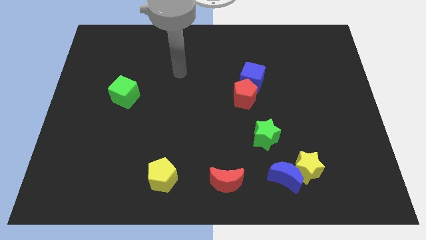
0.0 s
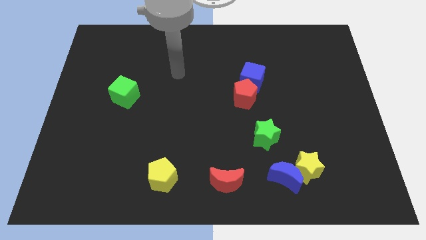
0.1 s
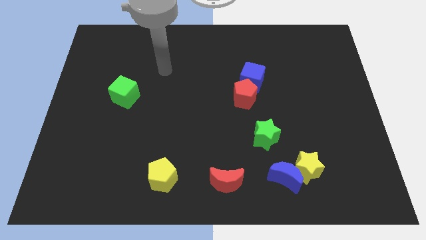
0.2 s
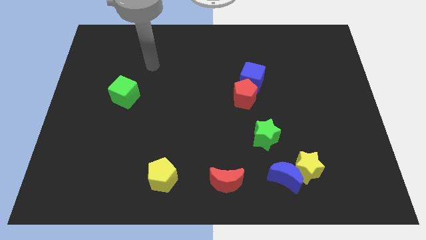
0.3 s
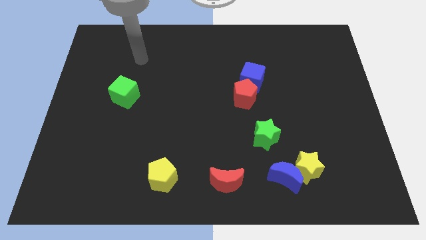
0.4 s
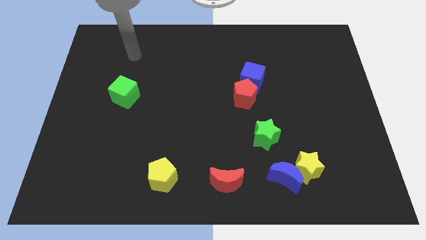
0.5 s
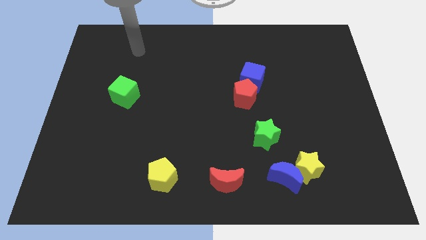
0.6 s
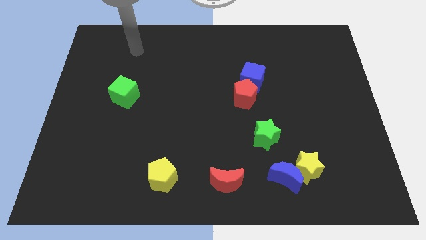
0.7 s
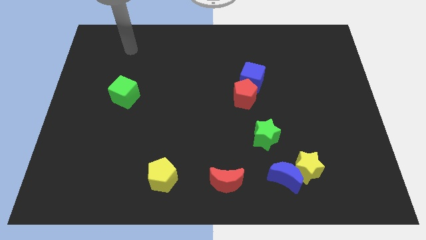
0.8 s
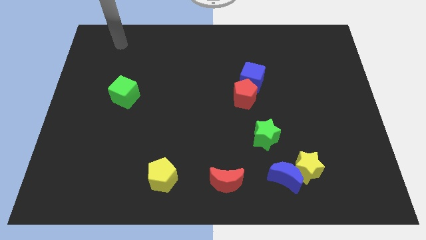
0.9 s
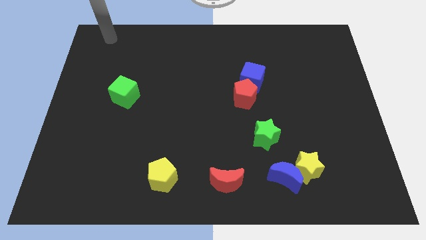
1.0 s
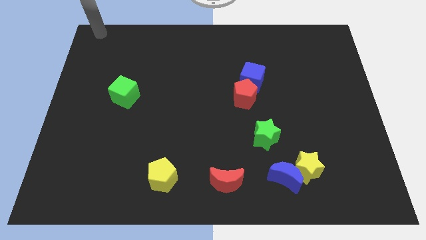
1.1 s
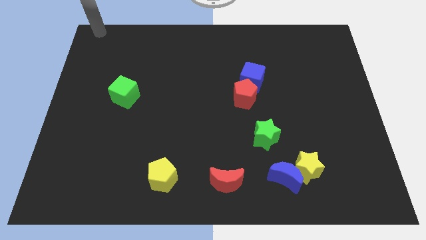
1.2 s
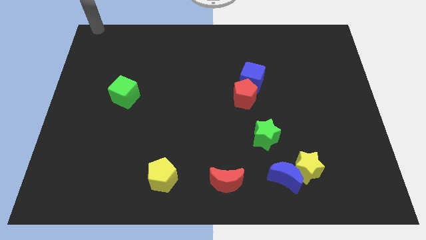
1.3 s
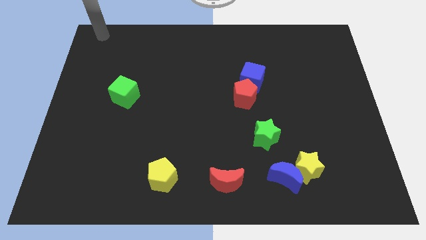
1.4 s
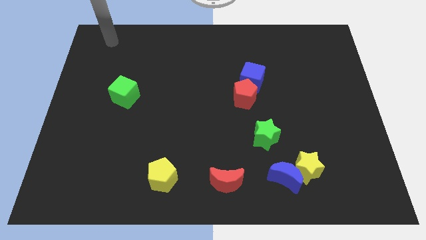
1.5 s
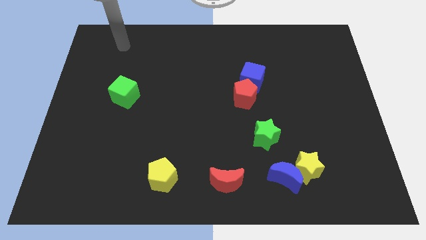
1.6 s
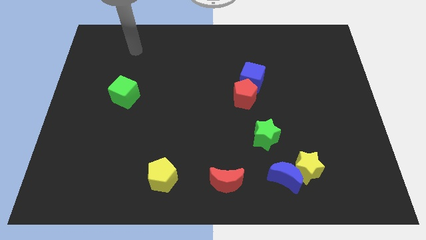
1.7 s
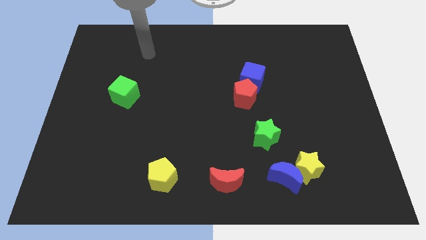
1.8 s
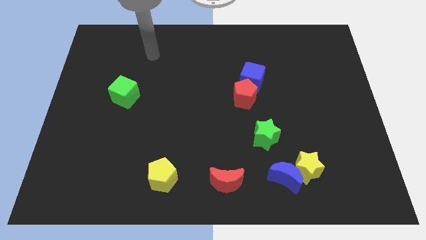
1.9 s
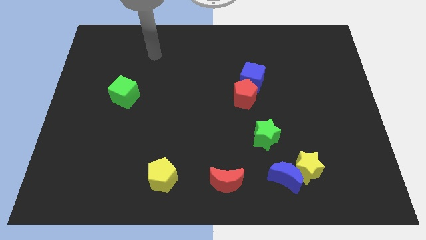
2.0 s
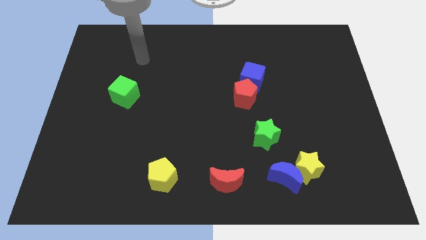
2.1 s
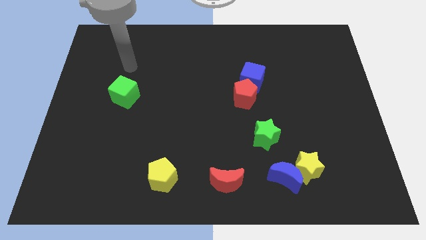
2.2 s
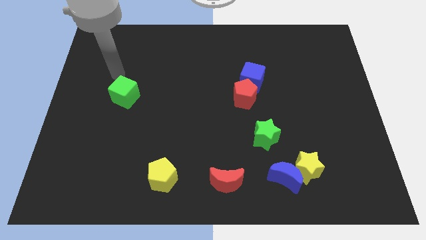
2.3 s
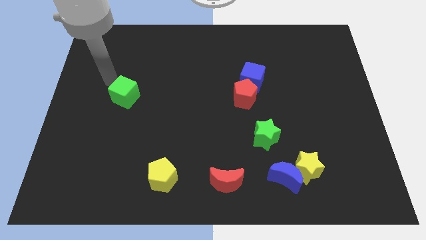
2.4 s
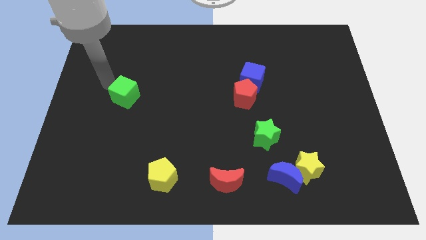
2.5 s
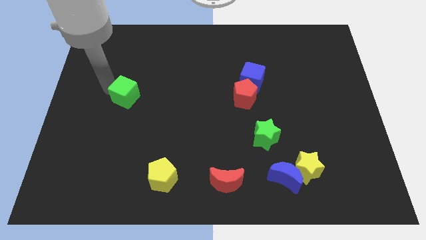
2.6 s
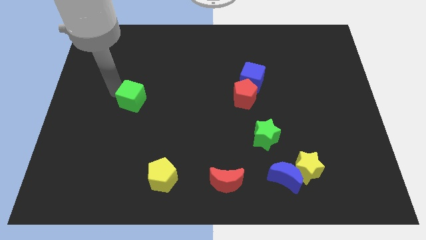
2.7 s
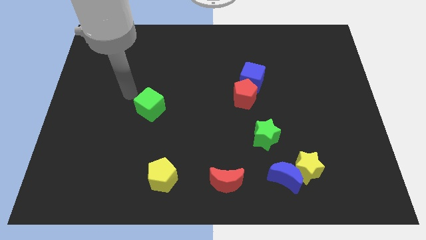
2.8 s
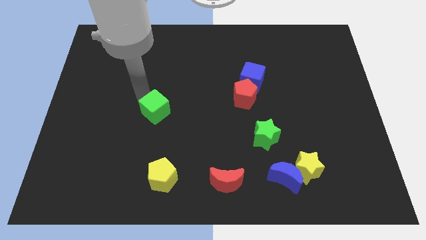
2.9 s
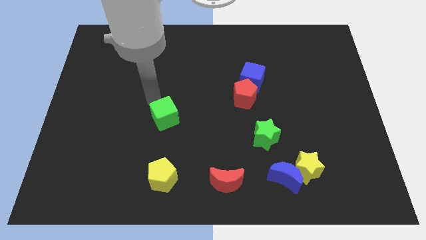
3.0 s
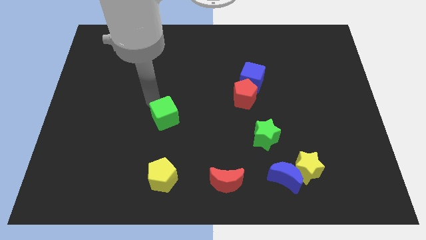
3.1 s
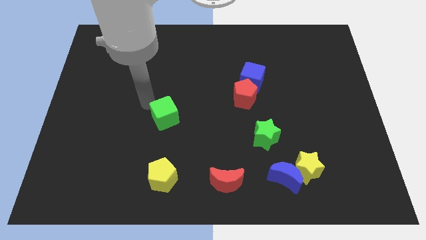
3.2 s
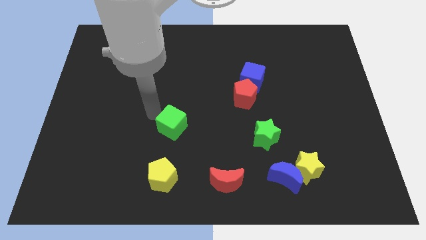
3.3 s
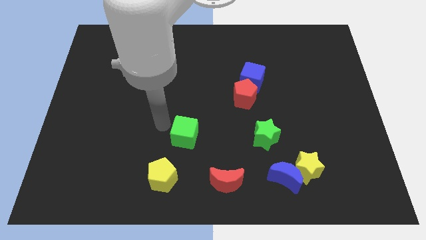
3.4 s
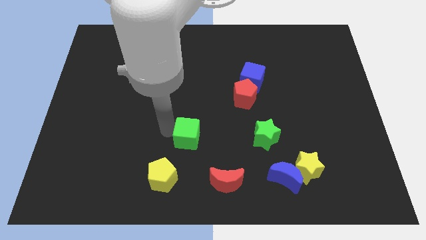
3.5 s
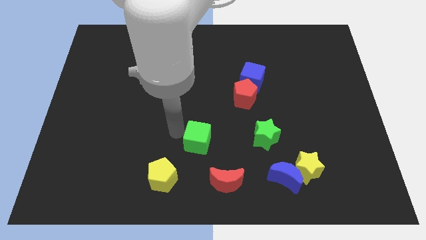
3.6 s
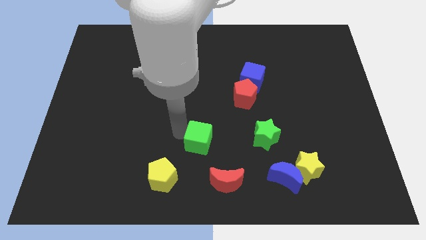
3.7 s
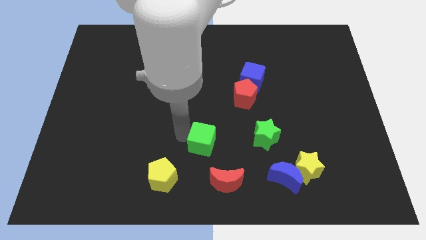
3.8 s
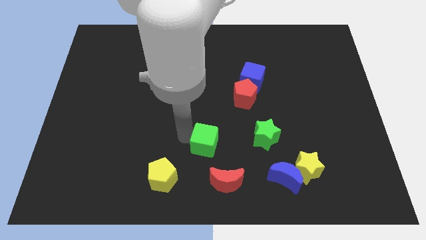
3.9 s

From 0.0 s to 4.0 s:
place the green cube above the yellow pentagon and the red moon to form a triangle

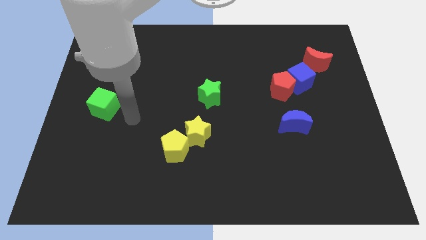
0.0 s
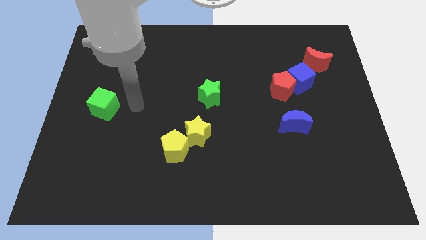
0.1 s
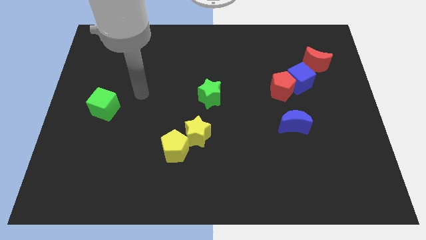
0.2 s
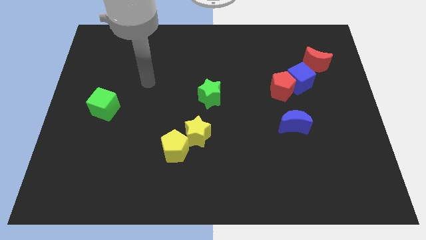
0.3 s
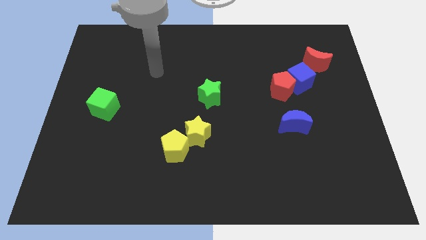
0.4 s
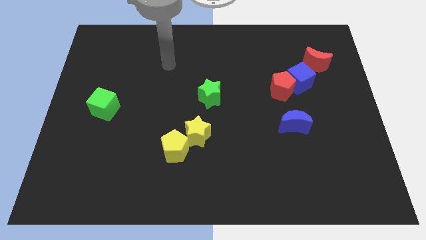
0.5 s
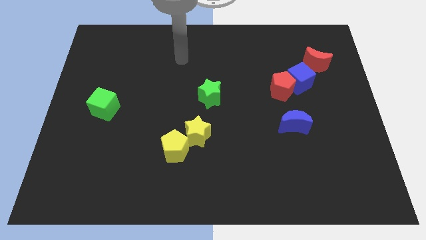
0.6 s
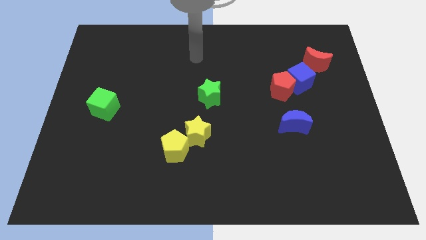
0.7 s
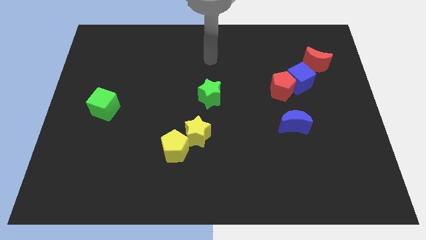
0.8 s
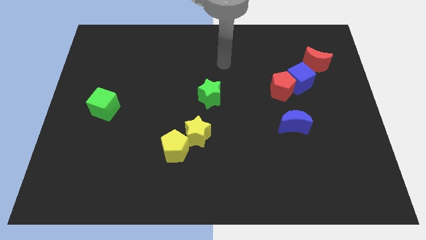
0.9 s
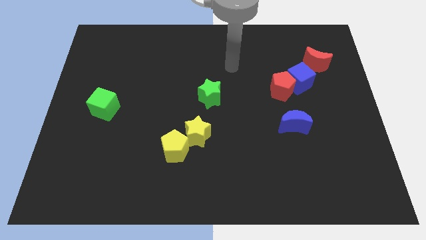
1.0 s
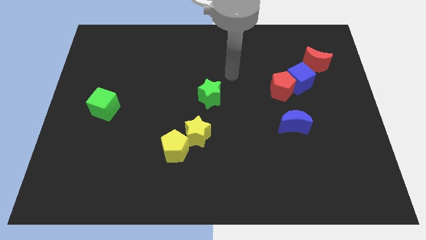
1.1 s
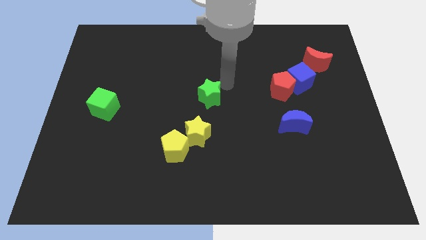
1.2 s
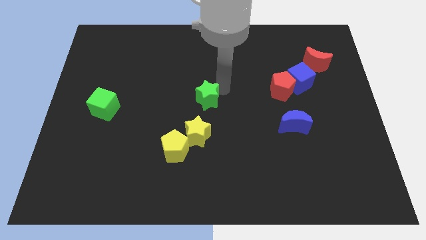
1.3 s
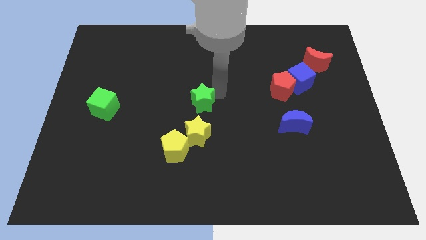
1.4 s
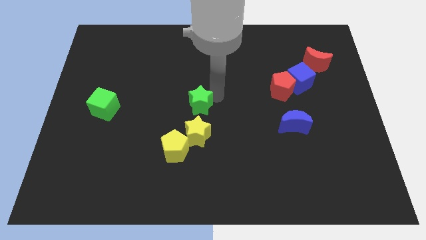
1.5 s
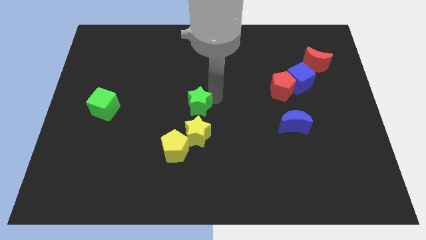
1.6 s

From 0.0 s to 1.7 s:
move the green star to the bottom of the board

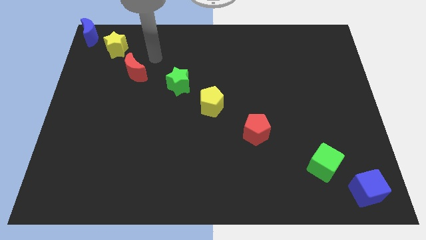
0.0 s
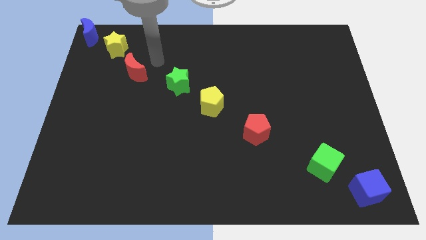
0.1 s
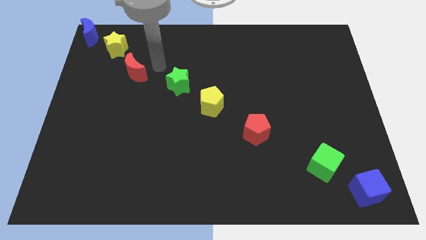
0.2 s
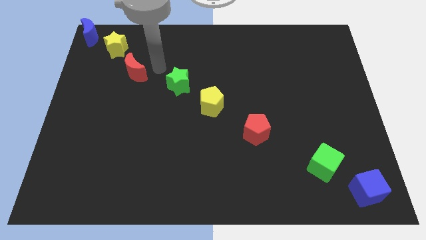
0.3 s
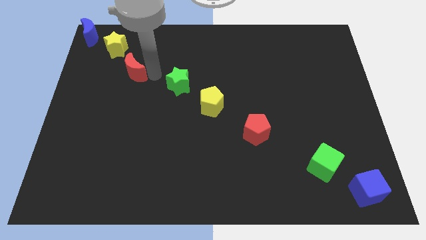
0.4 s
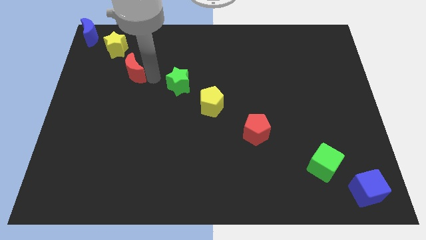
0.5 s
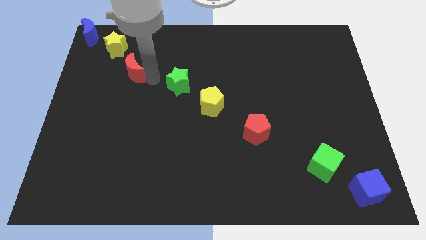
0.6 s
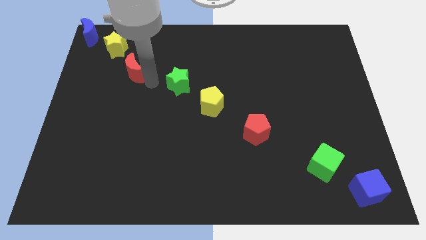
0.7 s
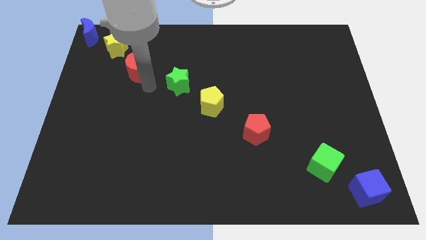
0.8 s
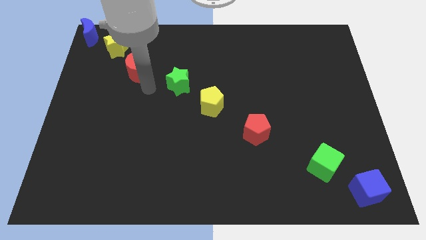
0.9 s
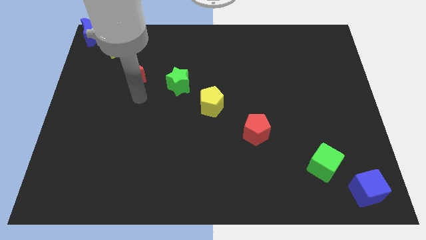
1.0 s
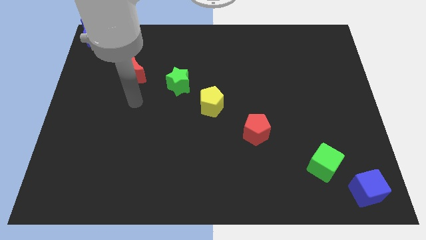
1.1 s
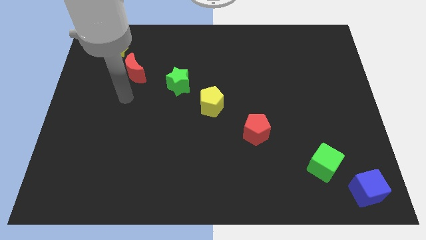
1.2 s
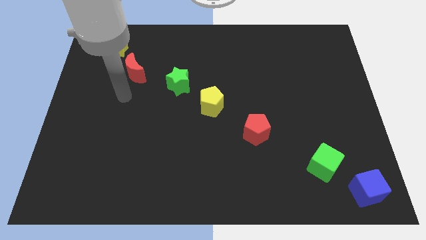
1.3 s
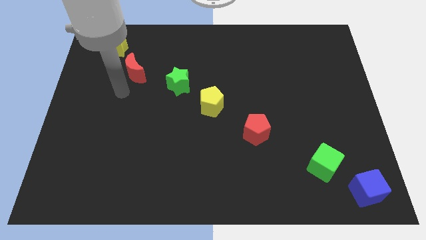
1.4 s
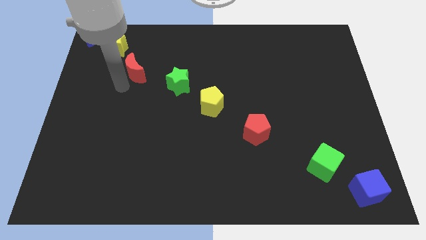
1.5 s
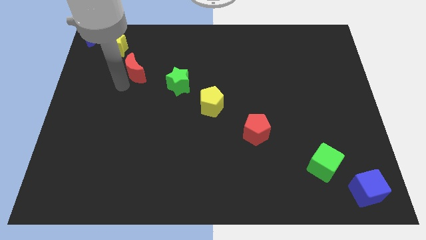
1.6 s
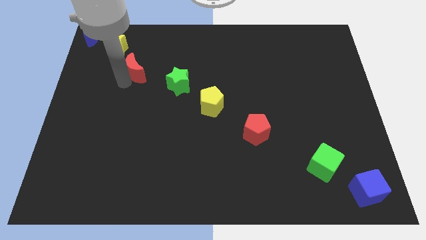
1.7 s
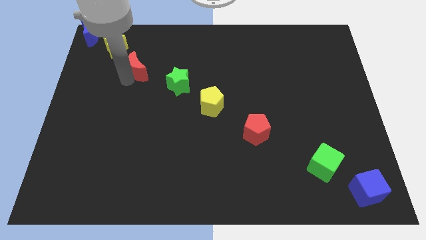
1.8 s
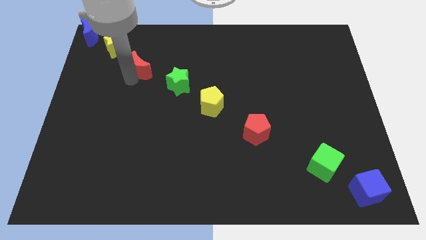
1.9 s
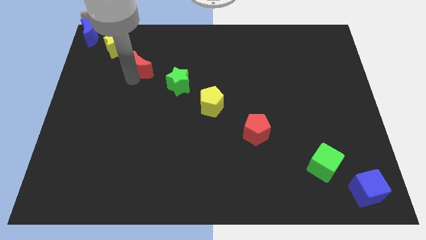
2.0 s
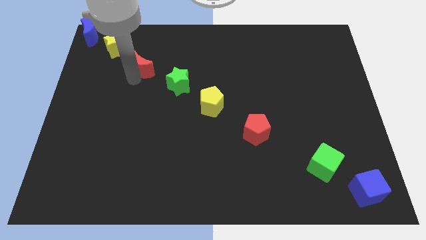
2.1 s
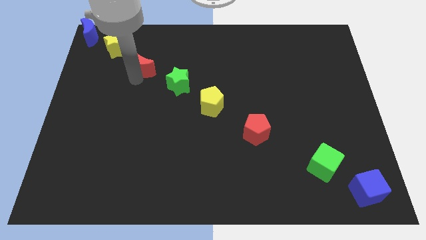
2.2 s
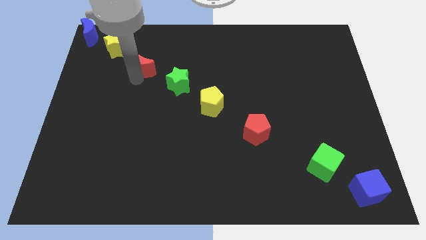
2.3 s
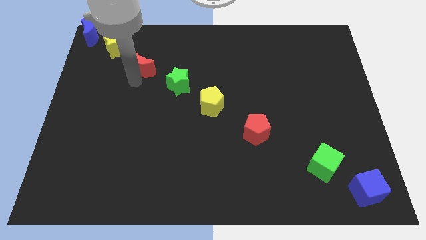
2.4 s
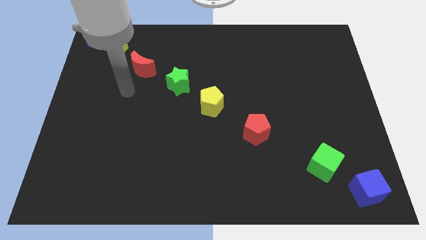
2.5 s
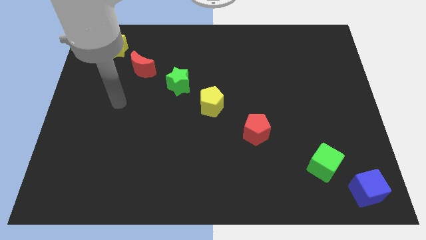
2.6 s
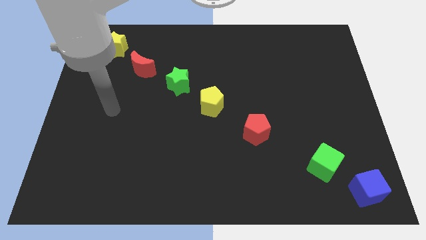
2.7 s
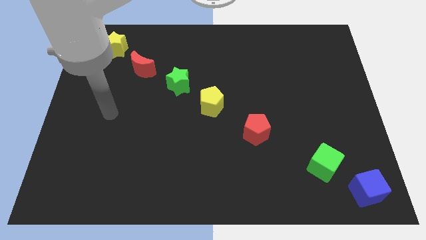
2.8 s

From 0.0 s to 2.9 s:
slightly move the red moon diagonally up

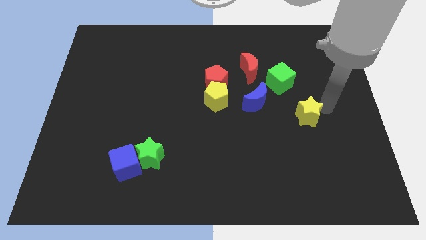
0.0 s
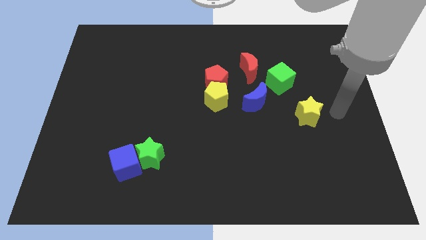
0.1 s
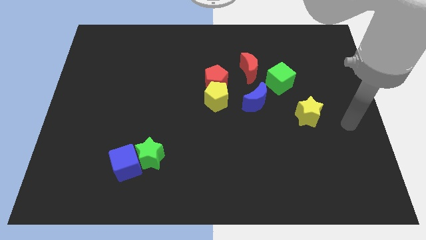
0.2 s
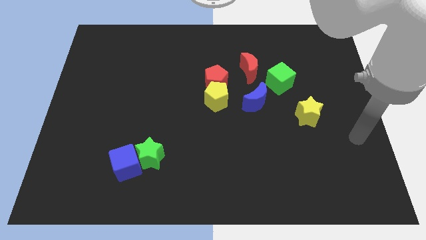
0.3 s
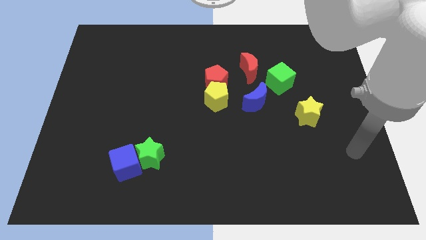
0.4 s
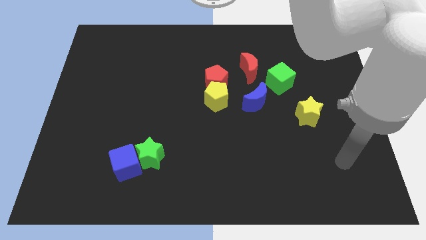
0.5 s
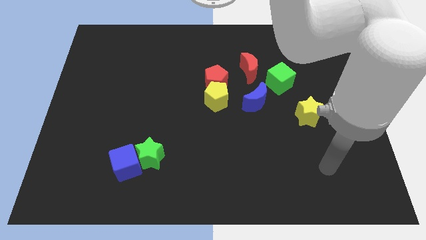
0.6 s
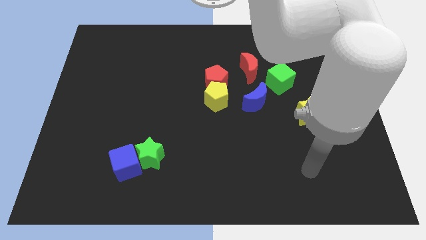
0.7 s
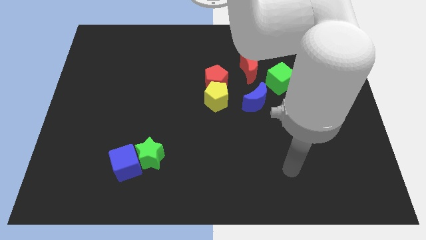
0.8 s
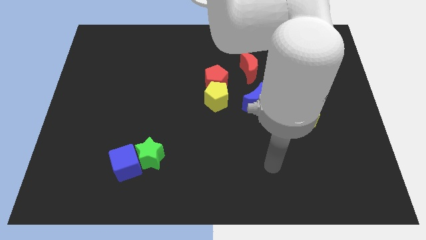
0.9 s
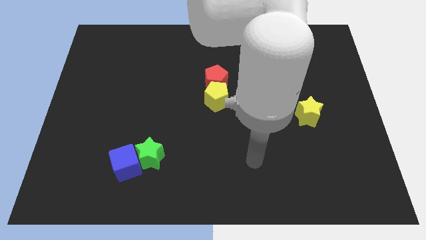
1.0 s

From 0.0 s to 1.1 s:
move away from the yellow star
